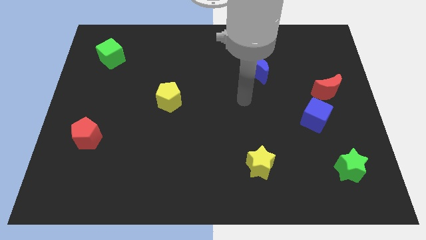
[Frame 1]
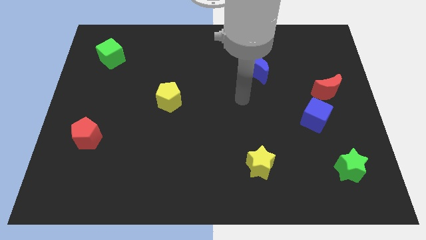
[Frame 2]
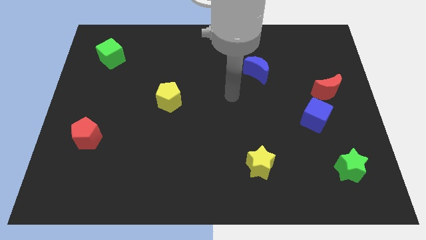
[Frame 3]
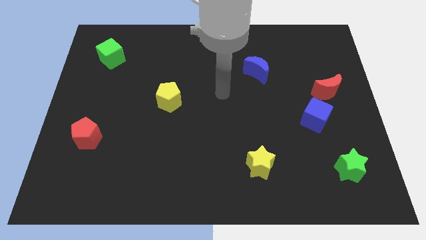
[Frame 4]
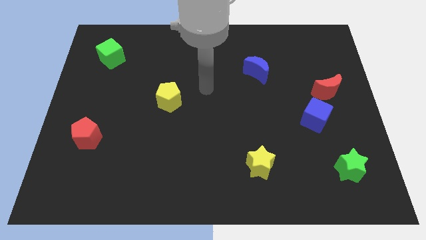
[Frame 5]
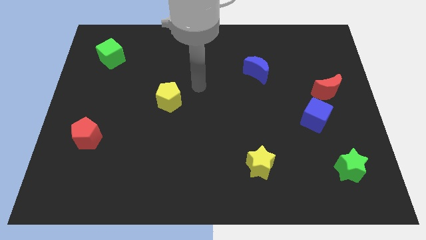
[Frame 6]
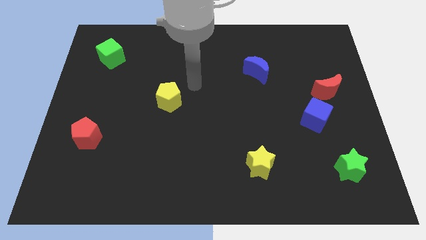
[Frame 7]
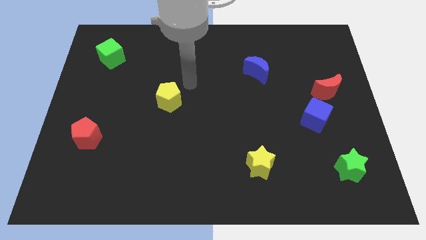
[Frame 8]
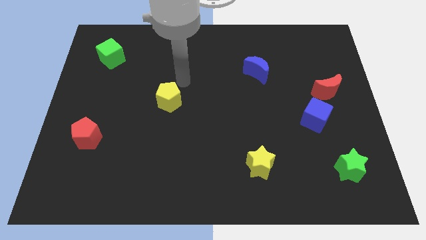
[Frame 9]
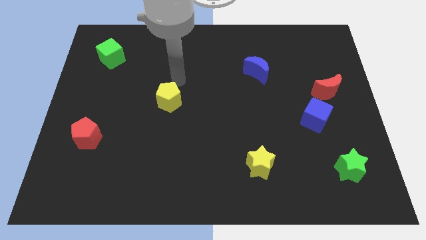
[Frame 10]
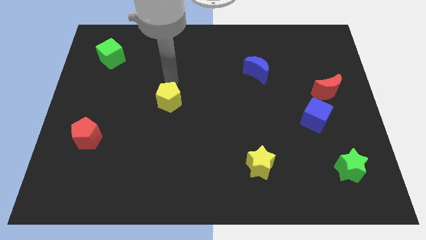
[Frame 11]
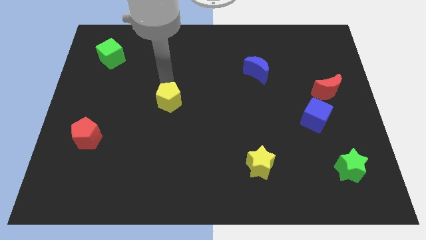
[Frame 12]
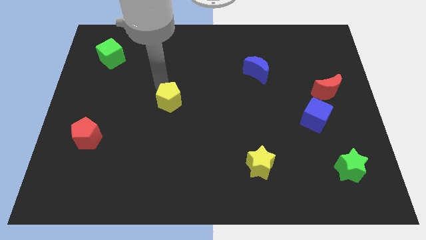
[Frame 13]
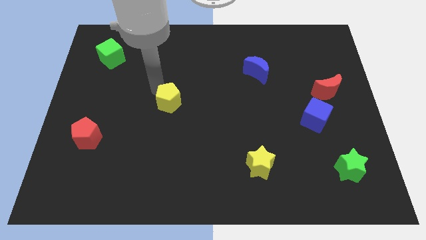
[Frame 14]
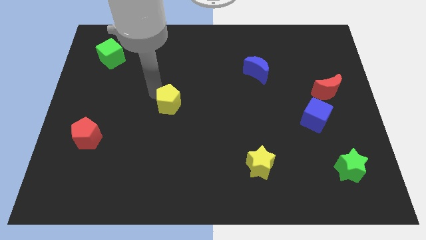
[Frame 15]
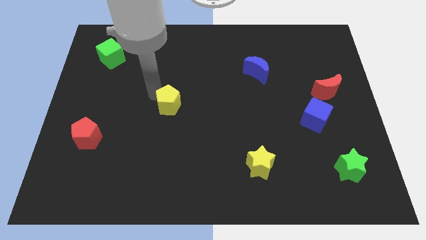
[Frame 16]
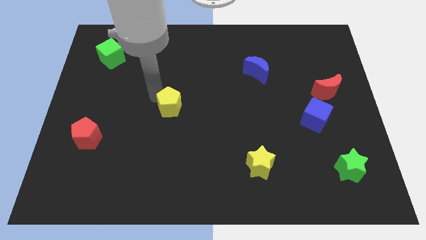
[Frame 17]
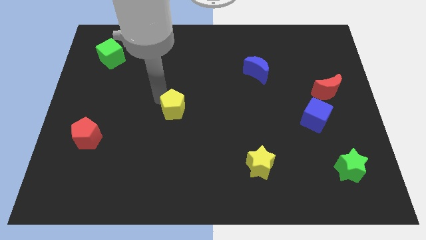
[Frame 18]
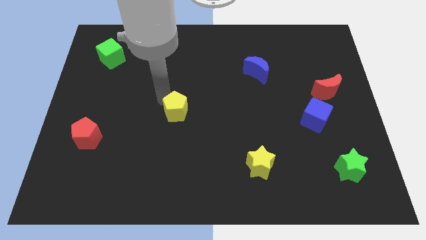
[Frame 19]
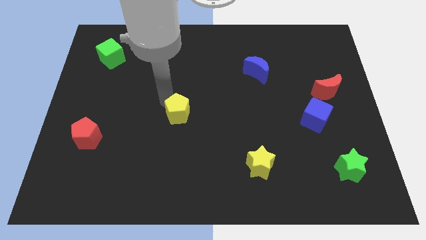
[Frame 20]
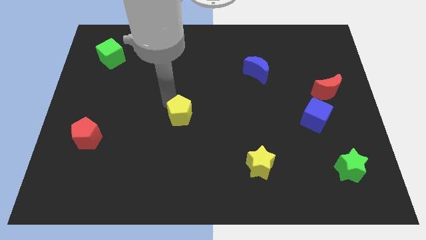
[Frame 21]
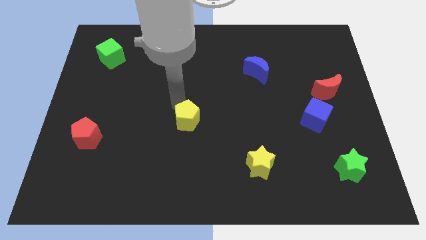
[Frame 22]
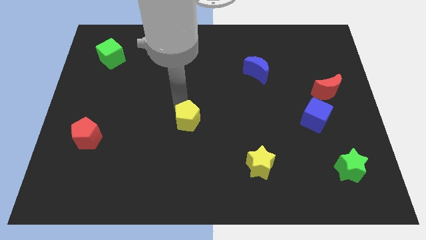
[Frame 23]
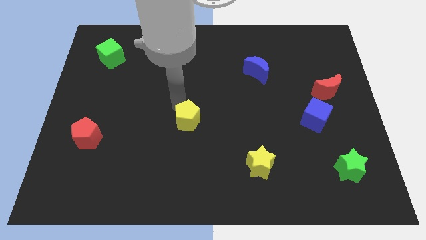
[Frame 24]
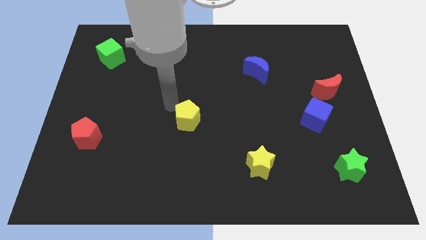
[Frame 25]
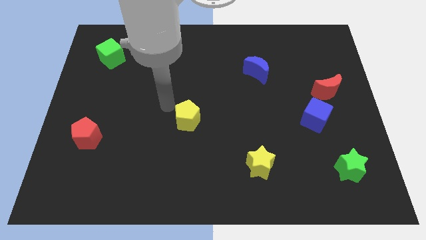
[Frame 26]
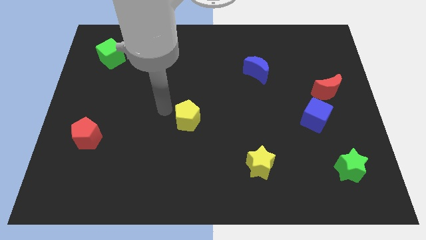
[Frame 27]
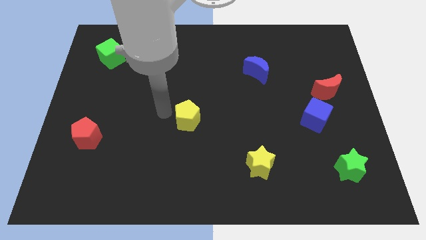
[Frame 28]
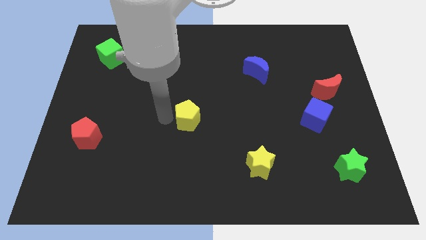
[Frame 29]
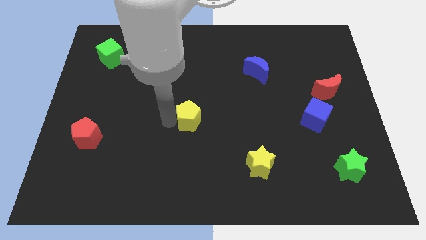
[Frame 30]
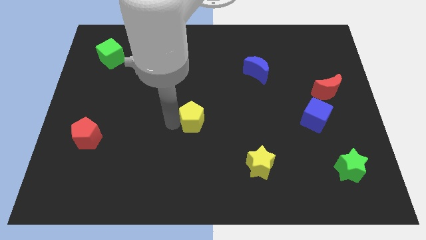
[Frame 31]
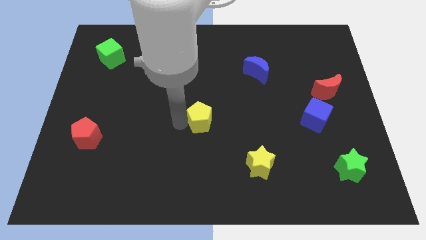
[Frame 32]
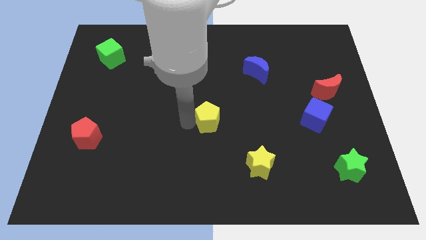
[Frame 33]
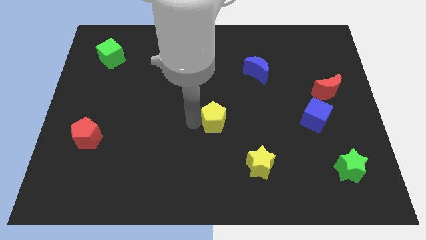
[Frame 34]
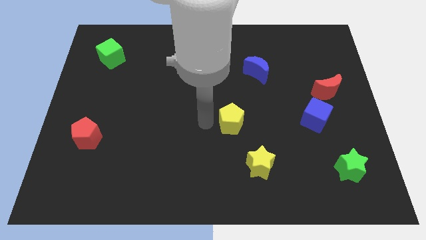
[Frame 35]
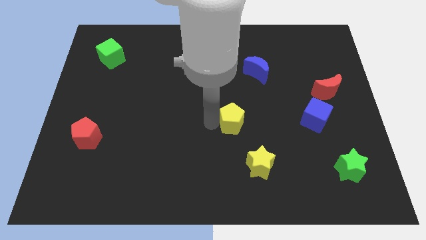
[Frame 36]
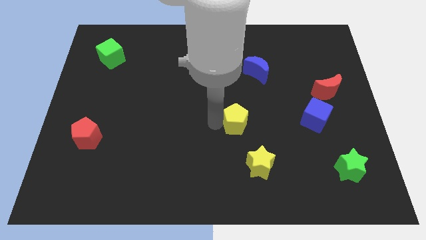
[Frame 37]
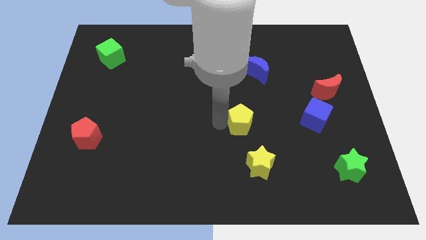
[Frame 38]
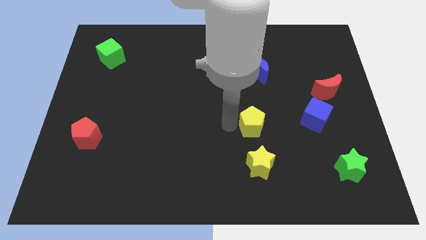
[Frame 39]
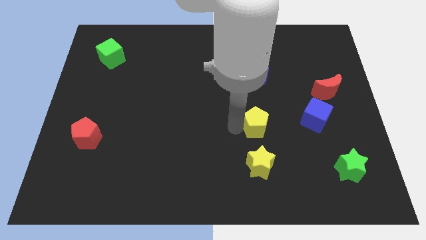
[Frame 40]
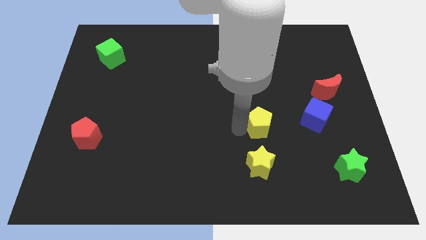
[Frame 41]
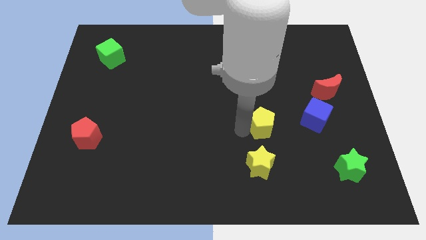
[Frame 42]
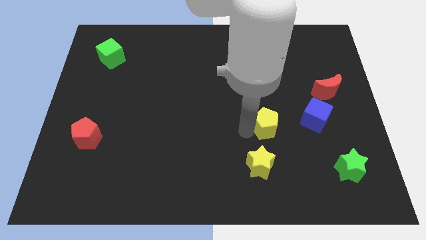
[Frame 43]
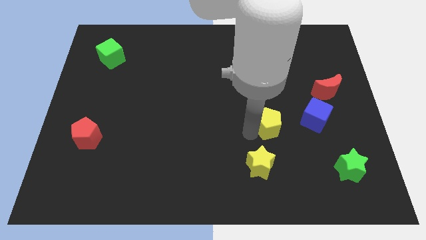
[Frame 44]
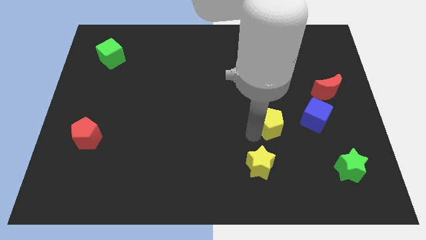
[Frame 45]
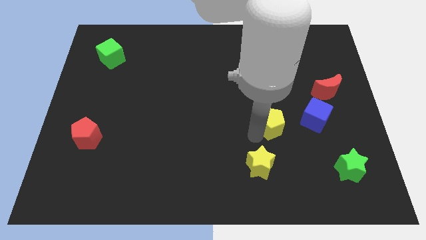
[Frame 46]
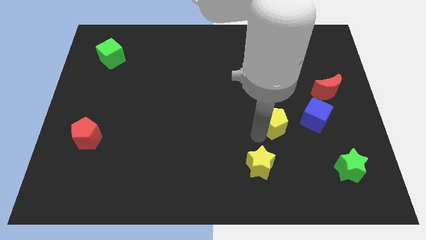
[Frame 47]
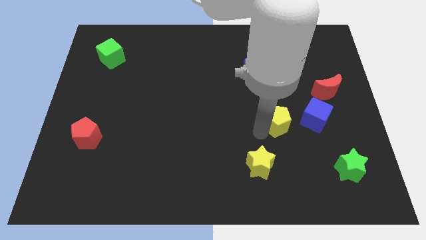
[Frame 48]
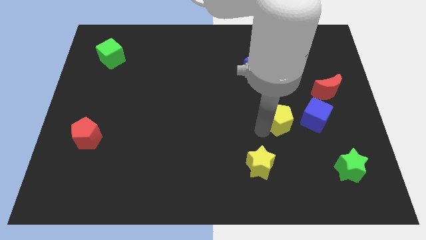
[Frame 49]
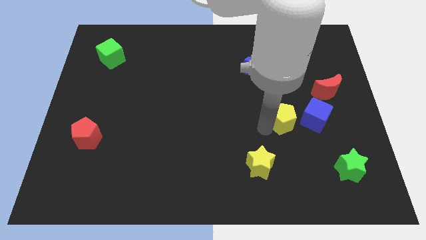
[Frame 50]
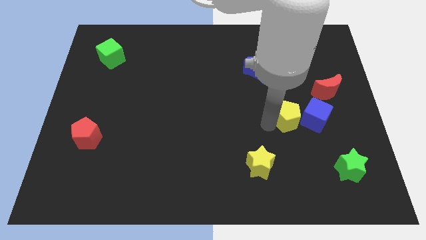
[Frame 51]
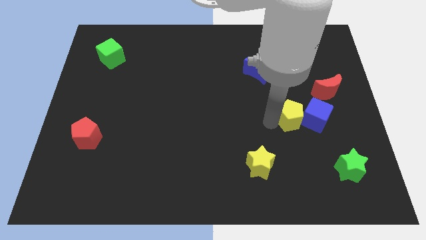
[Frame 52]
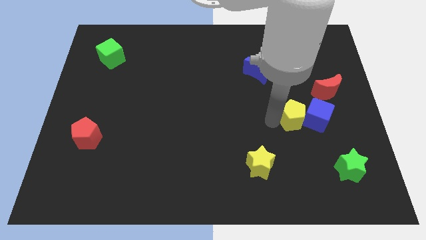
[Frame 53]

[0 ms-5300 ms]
move the yellow pentagon close to the blue cube

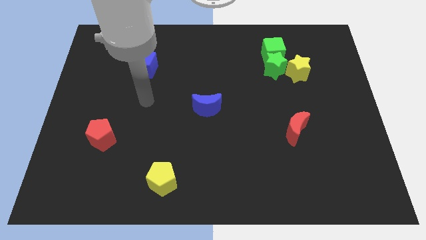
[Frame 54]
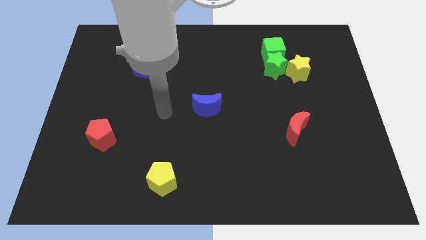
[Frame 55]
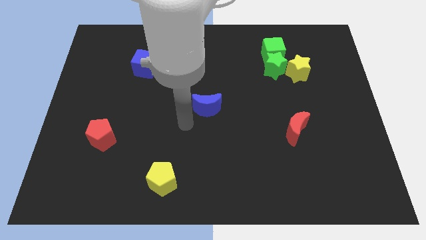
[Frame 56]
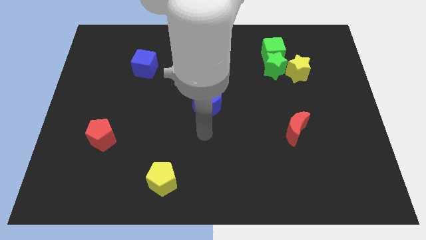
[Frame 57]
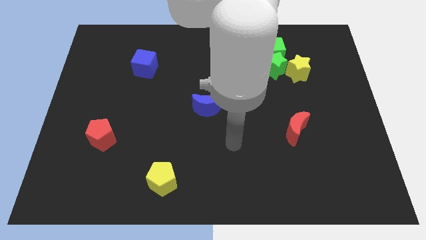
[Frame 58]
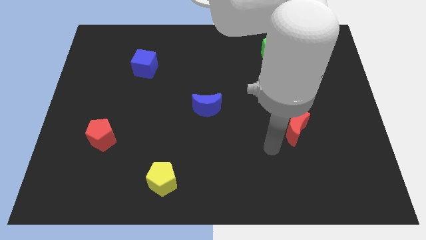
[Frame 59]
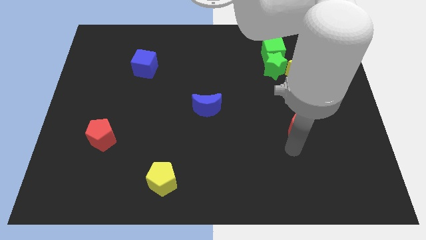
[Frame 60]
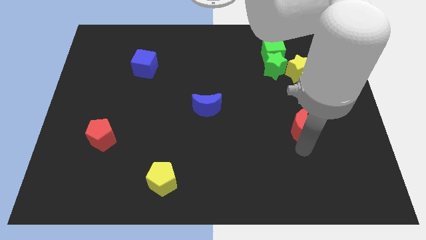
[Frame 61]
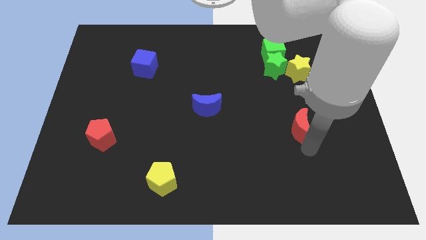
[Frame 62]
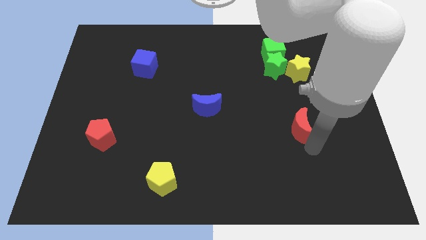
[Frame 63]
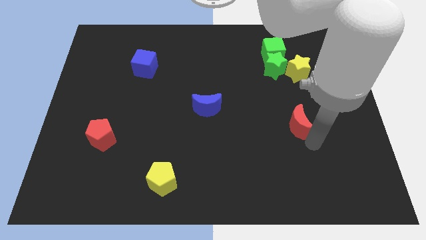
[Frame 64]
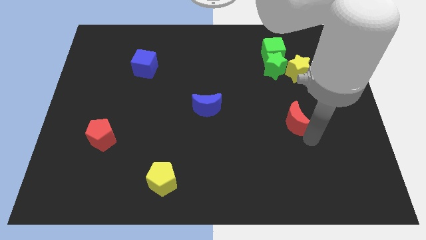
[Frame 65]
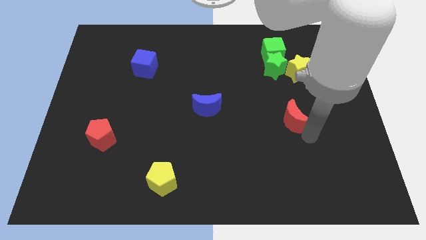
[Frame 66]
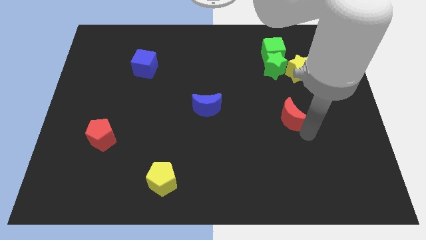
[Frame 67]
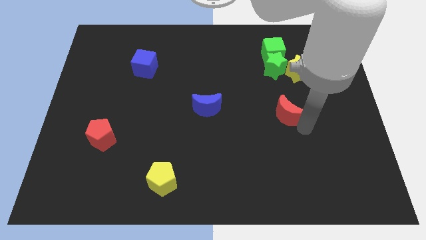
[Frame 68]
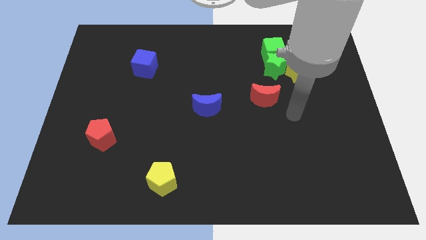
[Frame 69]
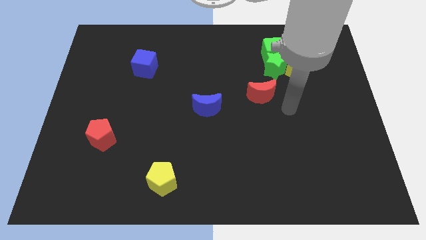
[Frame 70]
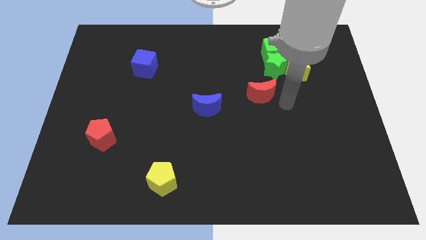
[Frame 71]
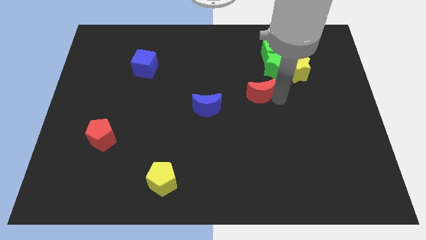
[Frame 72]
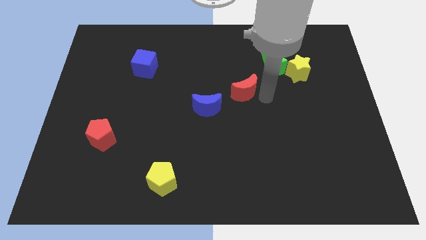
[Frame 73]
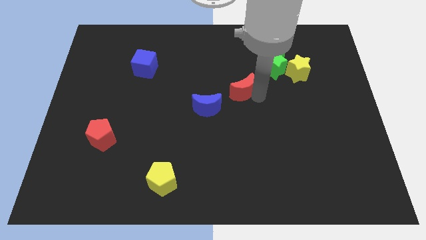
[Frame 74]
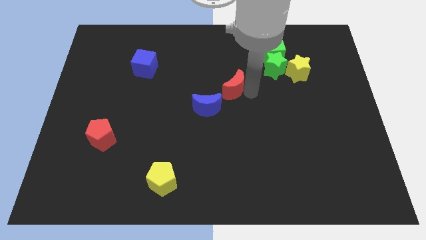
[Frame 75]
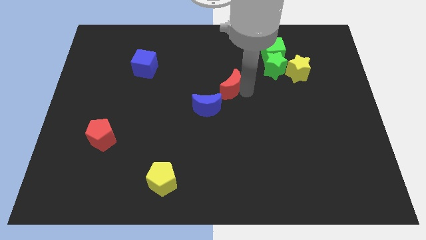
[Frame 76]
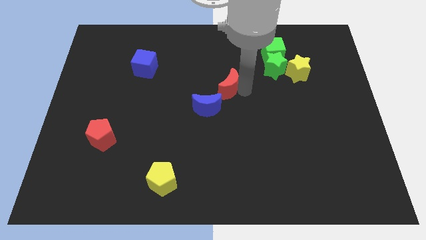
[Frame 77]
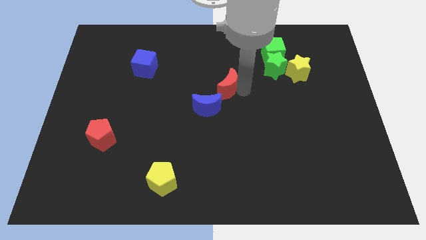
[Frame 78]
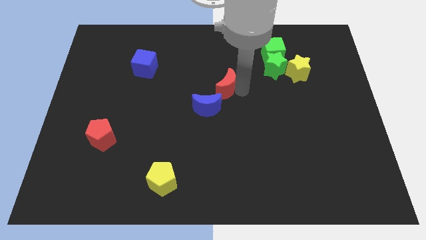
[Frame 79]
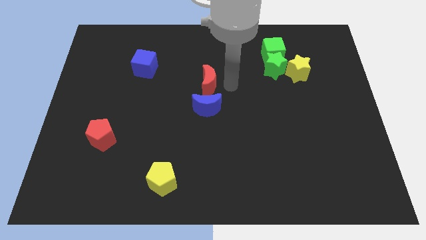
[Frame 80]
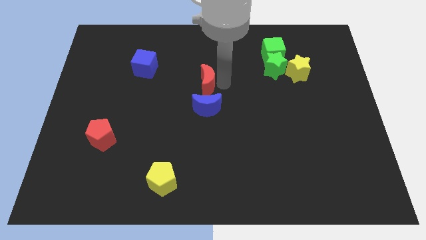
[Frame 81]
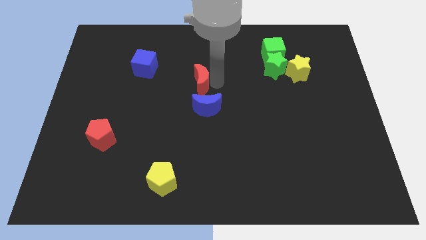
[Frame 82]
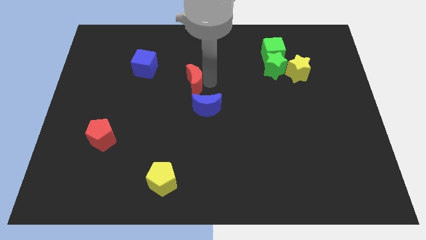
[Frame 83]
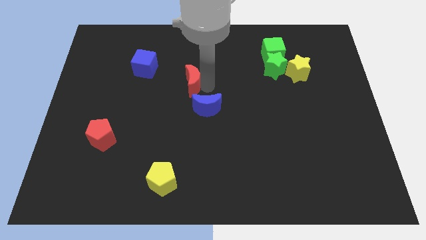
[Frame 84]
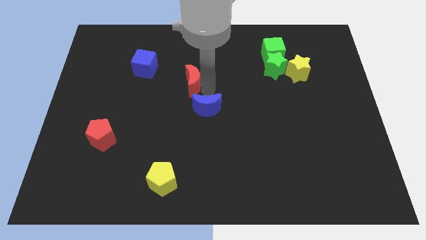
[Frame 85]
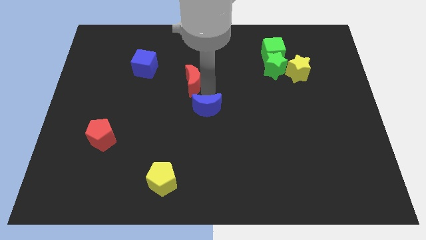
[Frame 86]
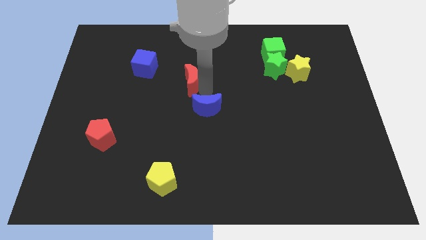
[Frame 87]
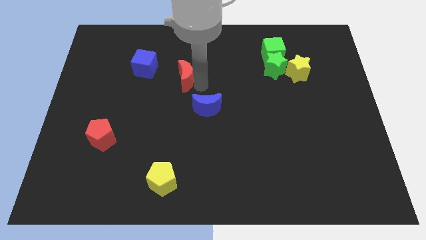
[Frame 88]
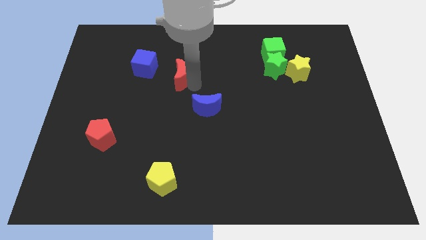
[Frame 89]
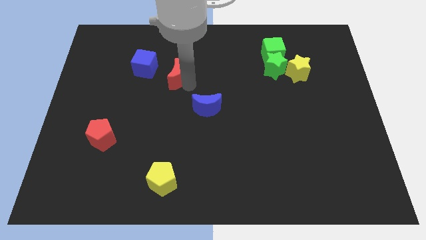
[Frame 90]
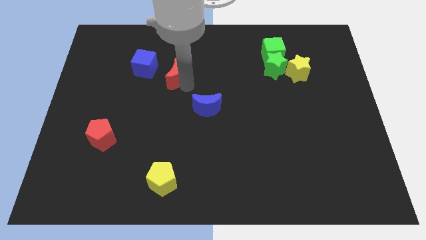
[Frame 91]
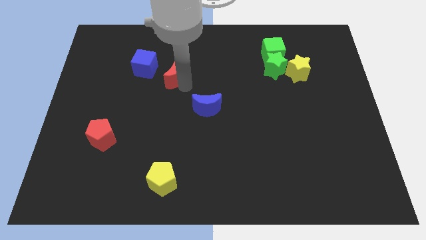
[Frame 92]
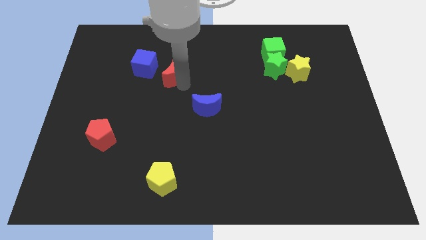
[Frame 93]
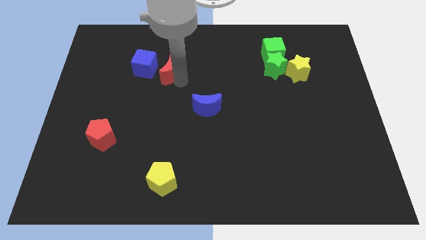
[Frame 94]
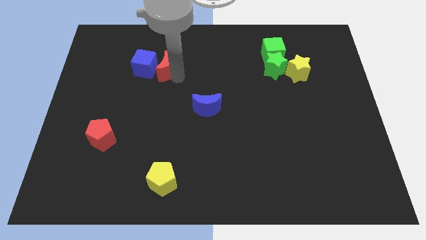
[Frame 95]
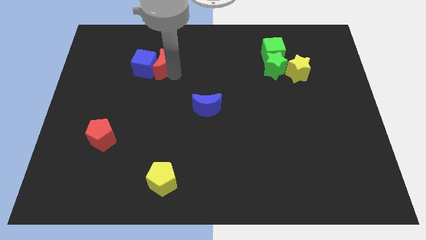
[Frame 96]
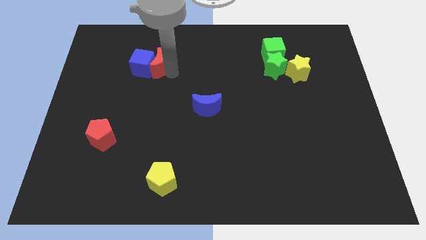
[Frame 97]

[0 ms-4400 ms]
move the red moon next to the blue cube
